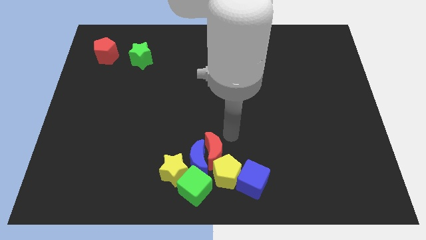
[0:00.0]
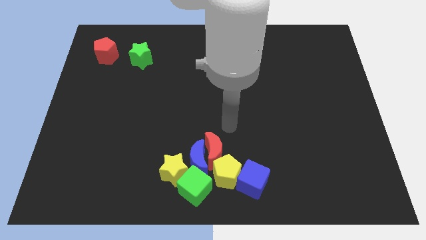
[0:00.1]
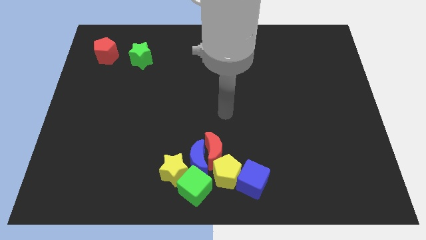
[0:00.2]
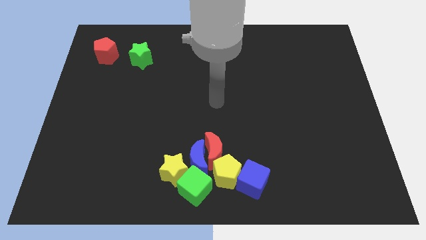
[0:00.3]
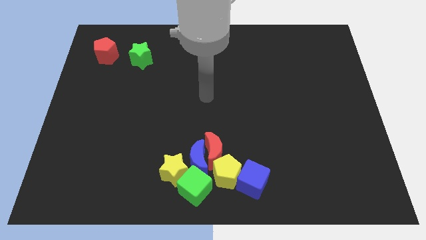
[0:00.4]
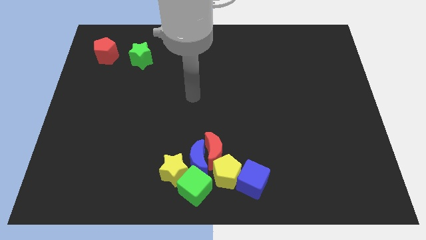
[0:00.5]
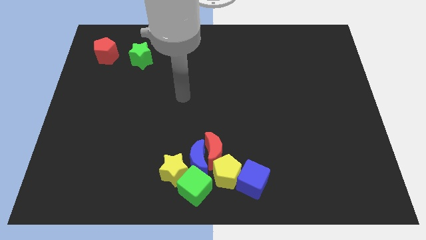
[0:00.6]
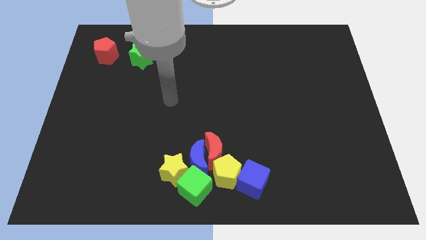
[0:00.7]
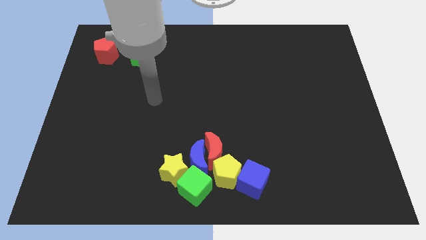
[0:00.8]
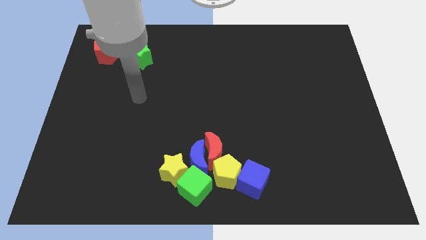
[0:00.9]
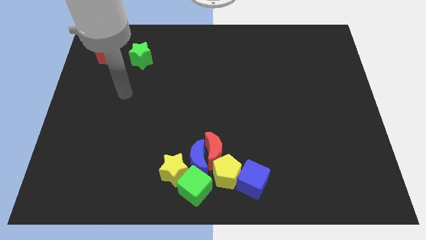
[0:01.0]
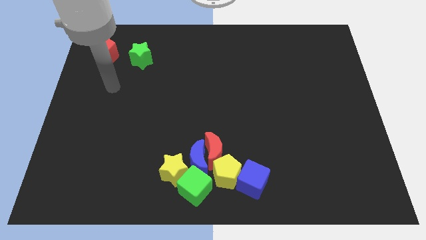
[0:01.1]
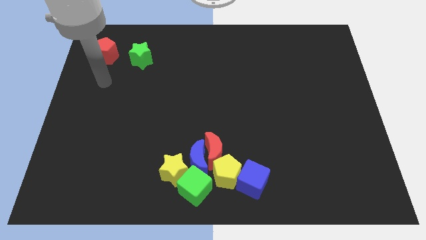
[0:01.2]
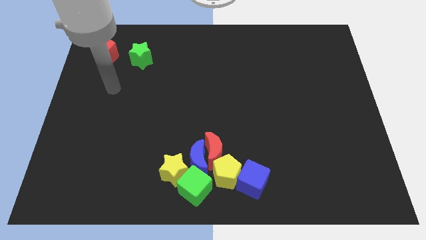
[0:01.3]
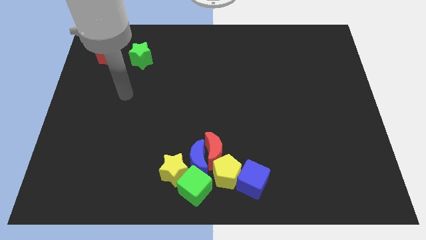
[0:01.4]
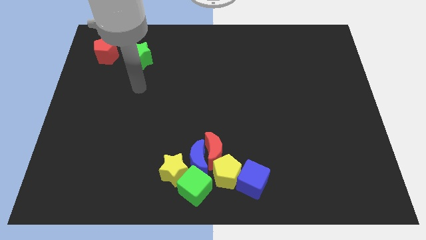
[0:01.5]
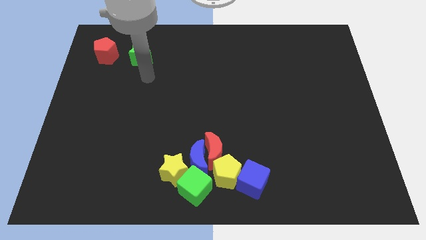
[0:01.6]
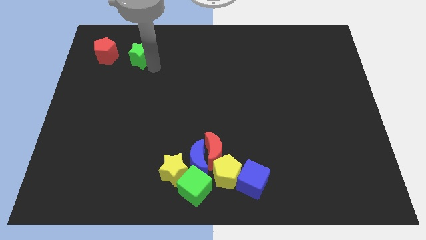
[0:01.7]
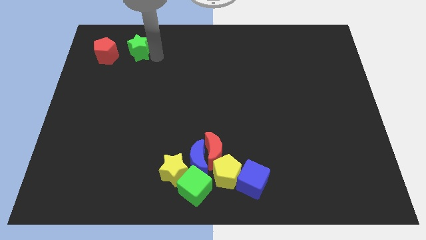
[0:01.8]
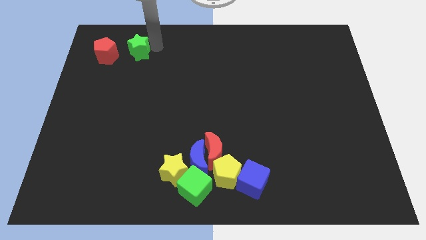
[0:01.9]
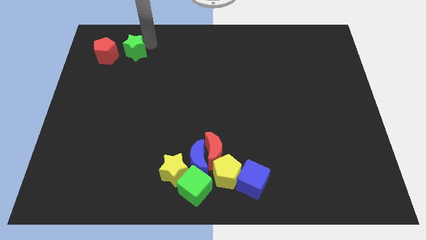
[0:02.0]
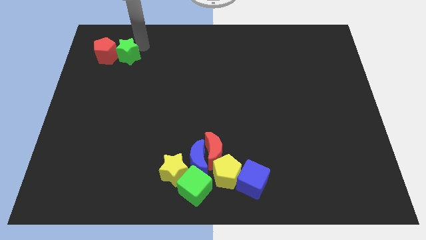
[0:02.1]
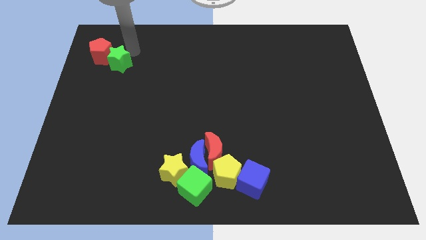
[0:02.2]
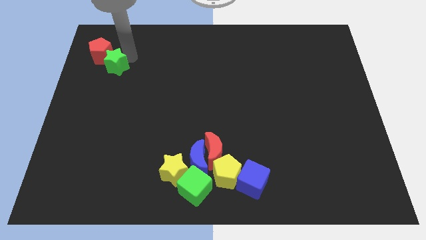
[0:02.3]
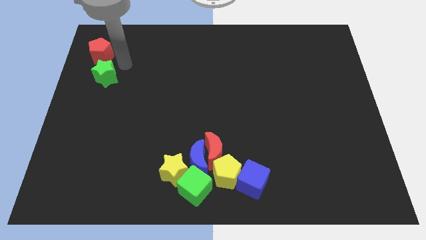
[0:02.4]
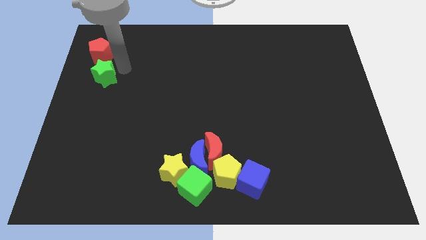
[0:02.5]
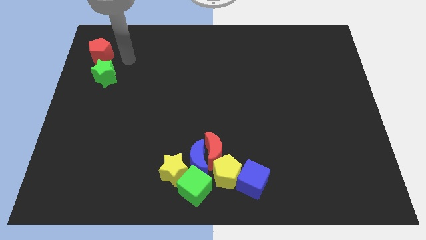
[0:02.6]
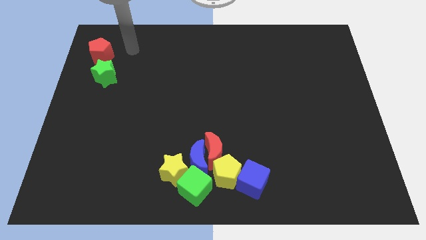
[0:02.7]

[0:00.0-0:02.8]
put the green star at the bottom of the red pentagon

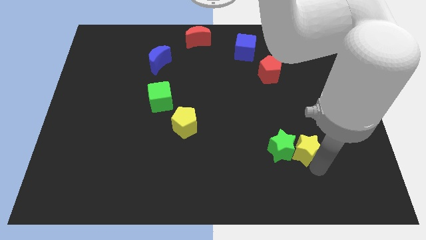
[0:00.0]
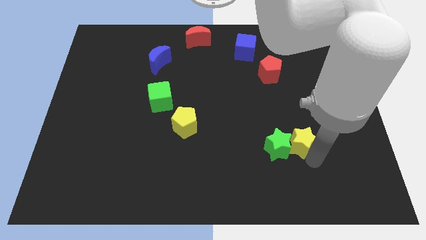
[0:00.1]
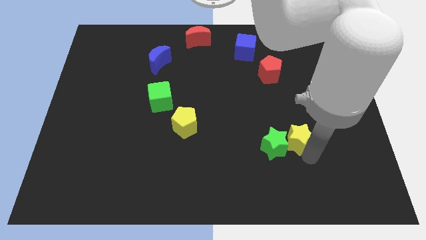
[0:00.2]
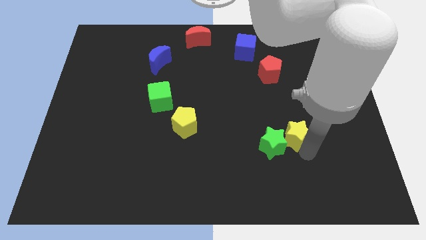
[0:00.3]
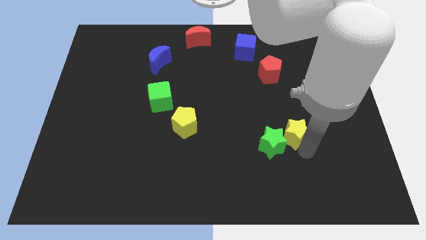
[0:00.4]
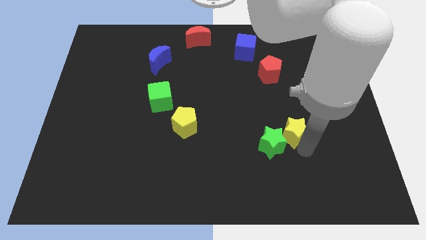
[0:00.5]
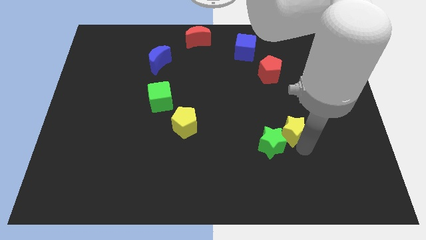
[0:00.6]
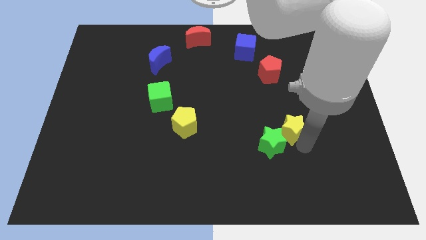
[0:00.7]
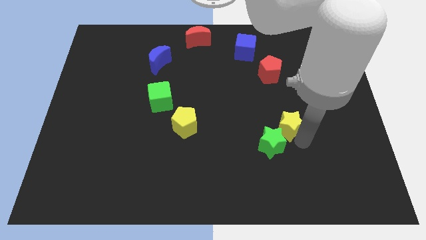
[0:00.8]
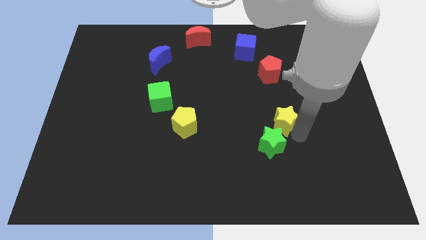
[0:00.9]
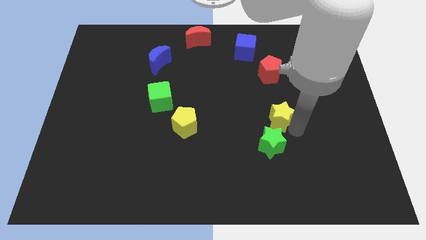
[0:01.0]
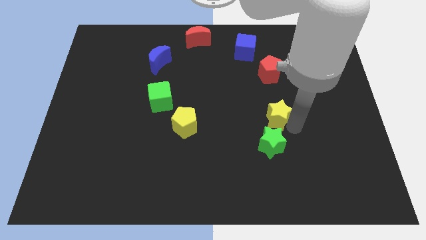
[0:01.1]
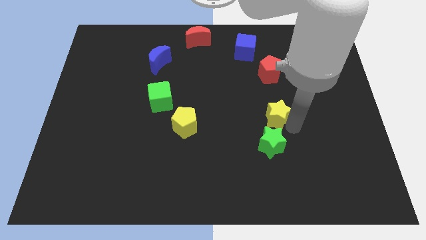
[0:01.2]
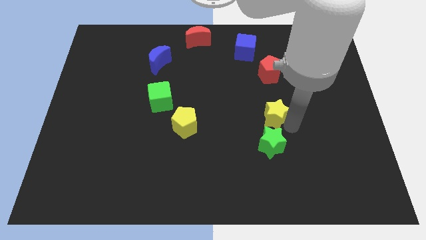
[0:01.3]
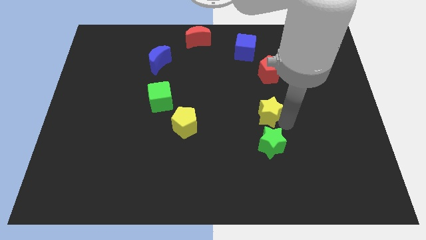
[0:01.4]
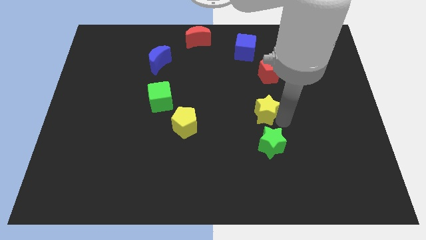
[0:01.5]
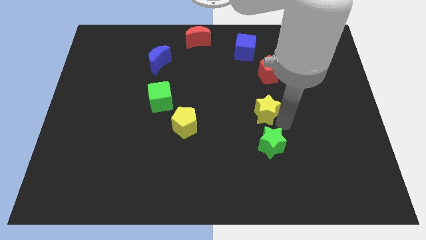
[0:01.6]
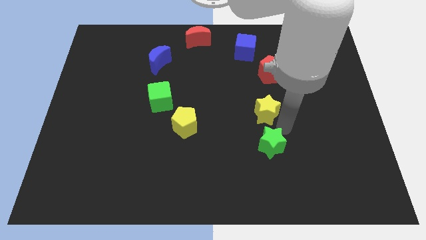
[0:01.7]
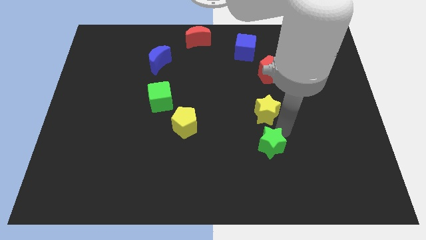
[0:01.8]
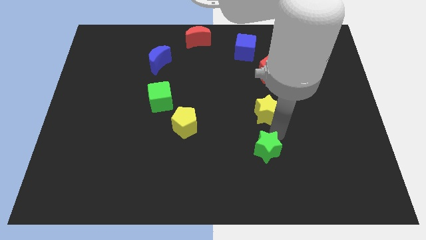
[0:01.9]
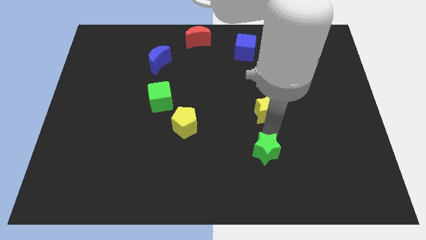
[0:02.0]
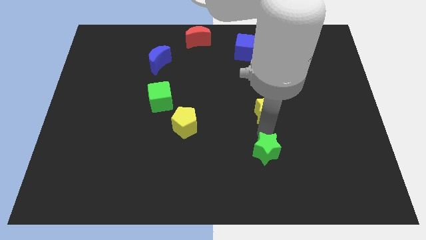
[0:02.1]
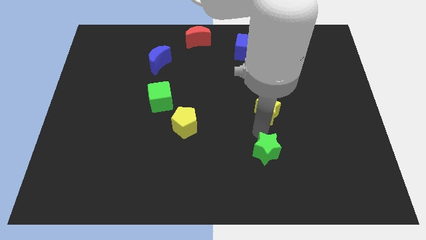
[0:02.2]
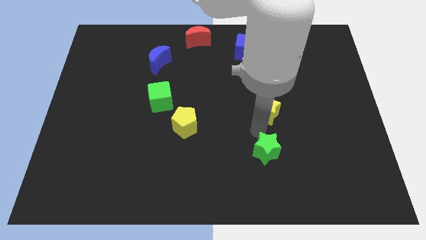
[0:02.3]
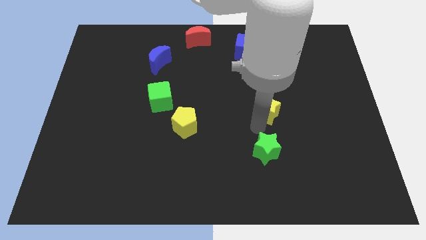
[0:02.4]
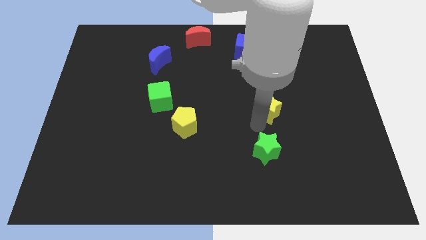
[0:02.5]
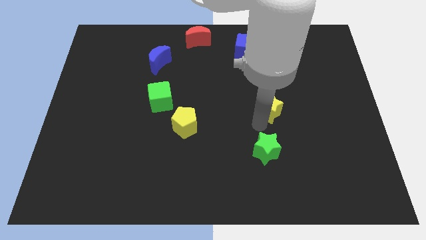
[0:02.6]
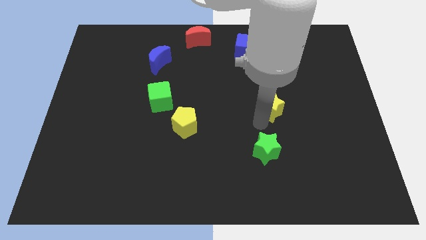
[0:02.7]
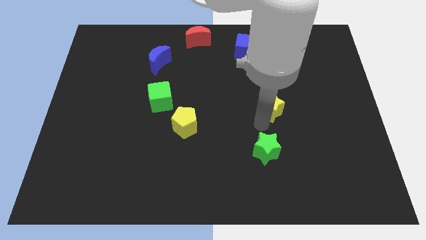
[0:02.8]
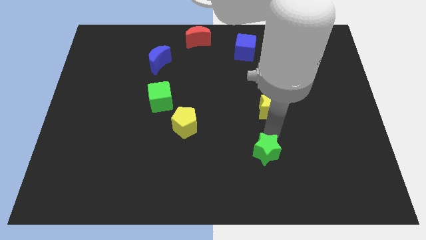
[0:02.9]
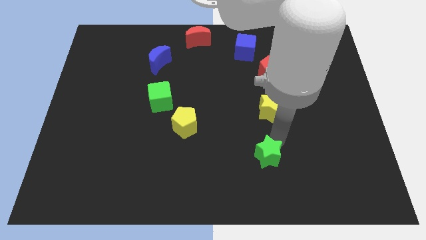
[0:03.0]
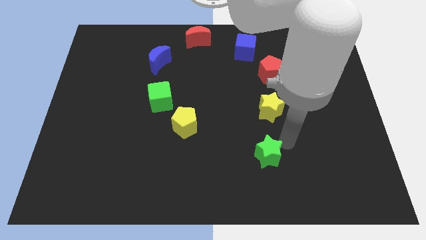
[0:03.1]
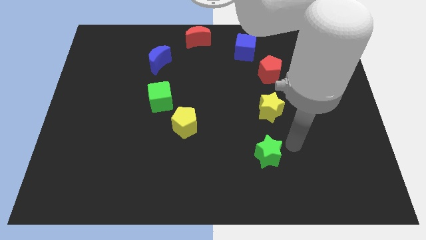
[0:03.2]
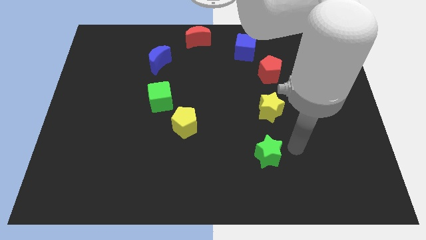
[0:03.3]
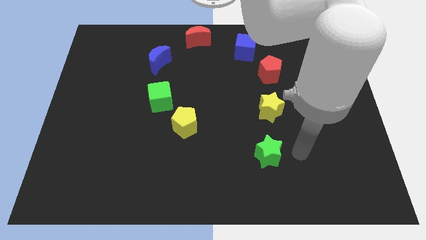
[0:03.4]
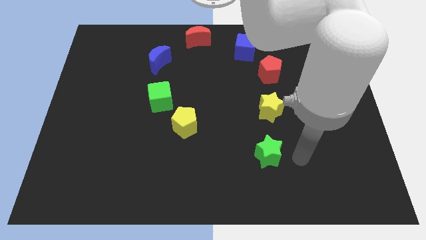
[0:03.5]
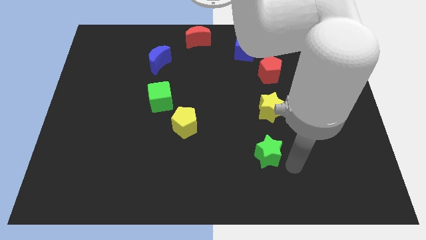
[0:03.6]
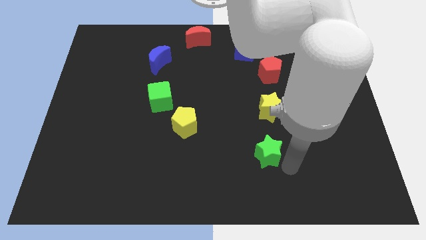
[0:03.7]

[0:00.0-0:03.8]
separate green and the yellow star

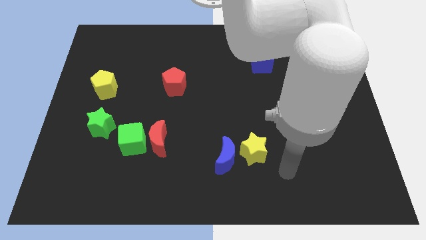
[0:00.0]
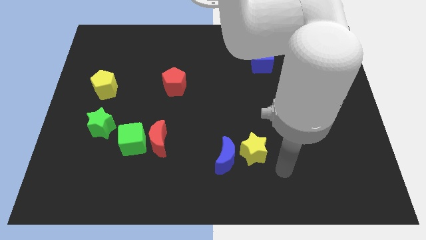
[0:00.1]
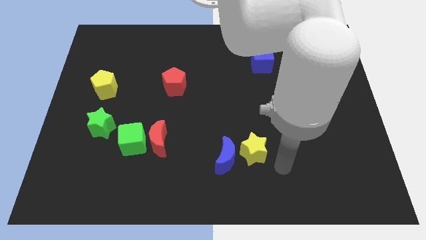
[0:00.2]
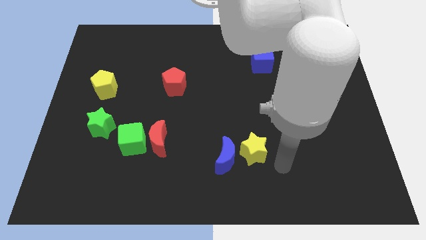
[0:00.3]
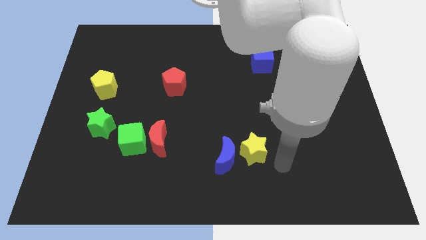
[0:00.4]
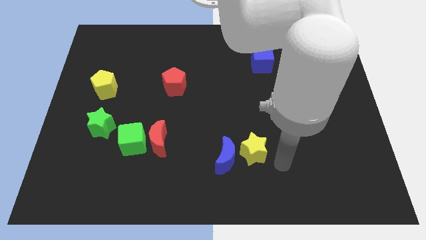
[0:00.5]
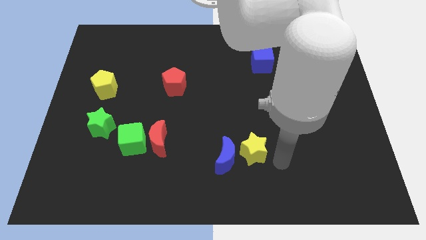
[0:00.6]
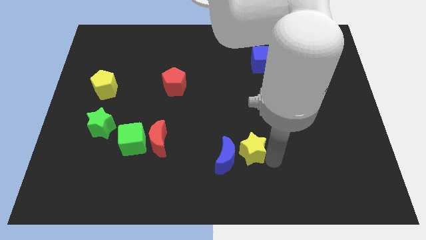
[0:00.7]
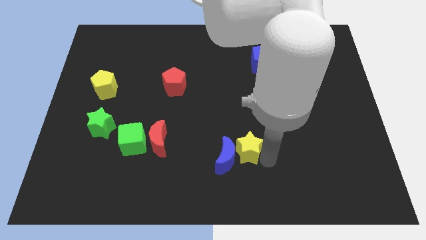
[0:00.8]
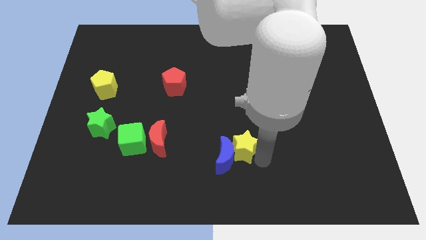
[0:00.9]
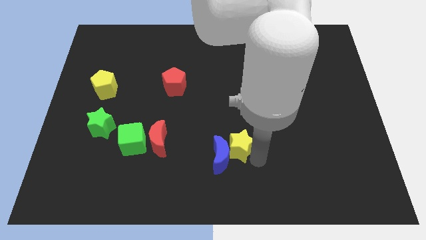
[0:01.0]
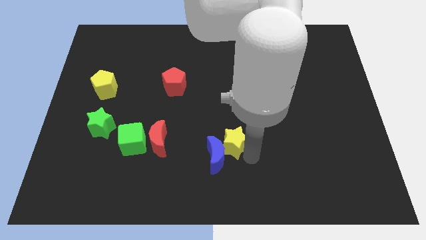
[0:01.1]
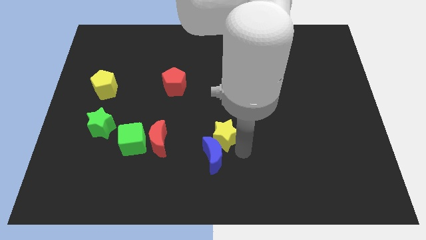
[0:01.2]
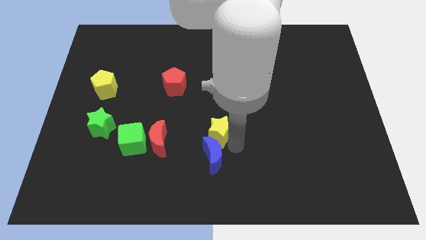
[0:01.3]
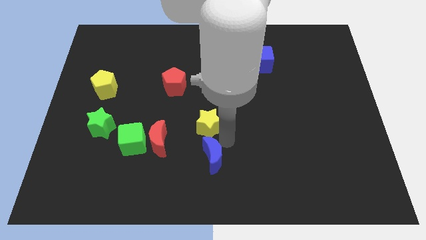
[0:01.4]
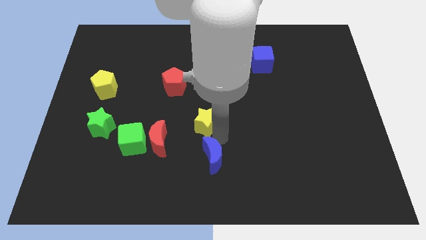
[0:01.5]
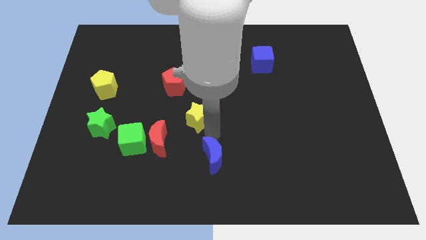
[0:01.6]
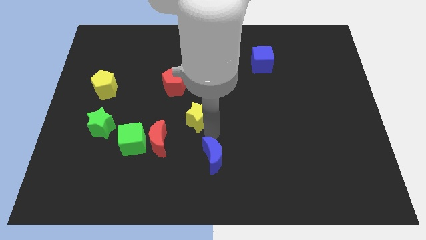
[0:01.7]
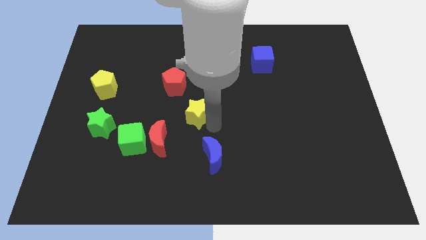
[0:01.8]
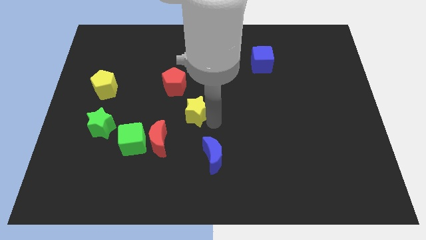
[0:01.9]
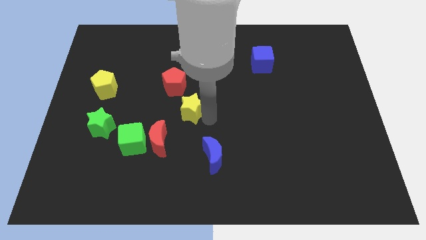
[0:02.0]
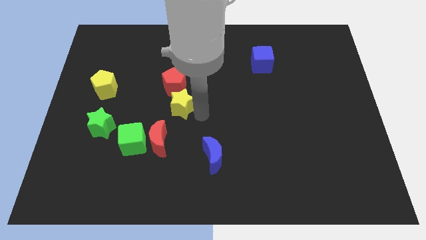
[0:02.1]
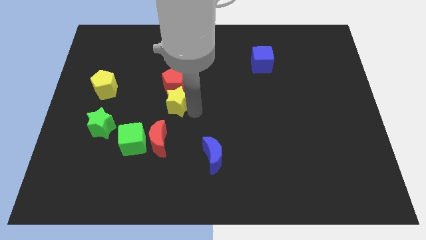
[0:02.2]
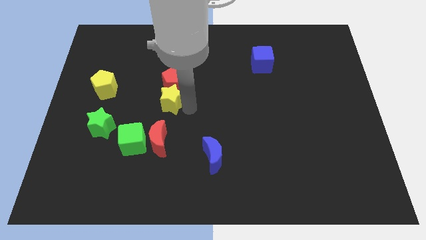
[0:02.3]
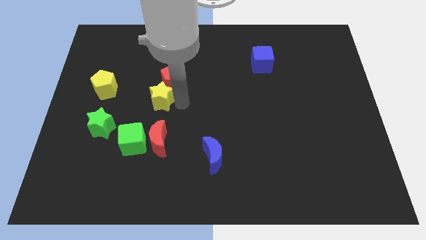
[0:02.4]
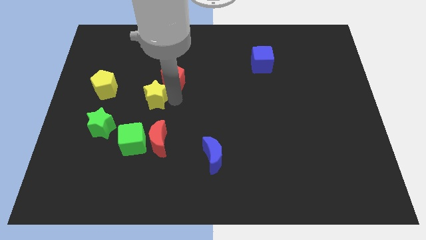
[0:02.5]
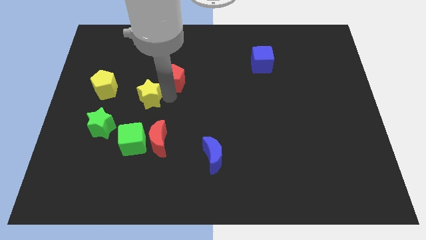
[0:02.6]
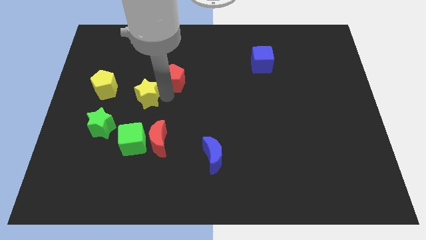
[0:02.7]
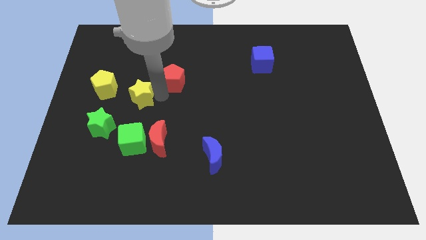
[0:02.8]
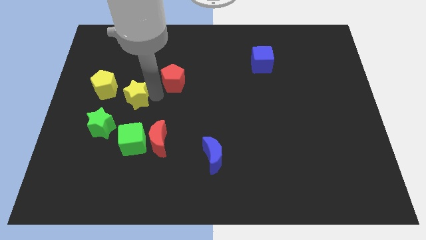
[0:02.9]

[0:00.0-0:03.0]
move the yellow star to the top of the green cube
